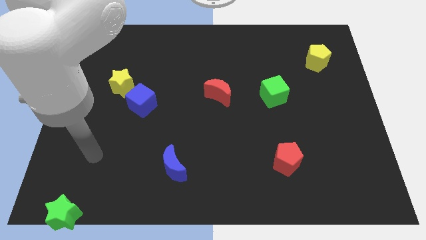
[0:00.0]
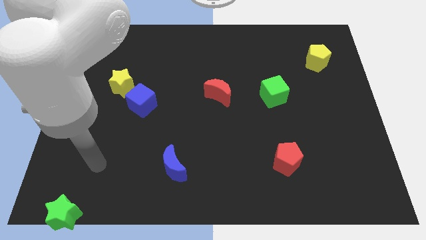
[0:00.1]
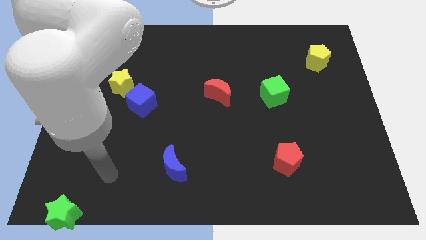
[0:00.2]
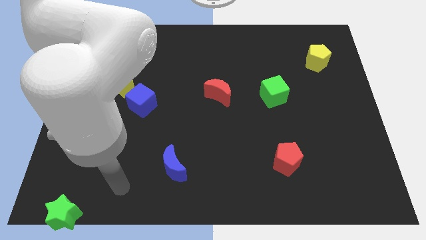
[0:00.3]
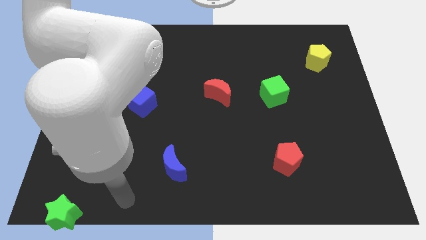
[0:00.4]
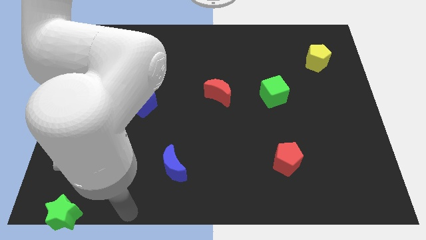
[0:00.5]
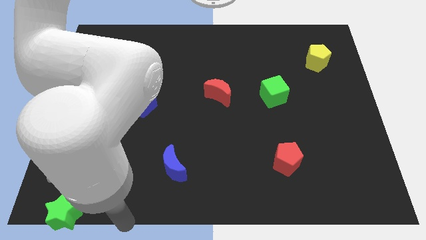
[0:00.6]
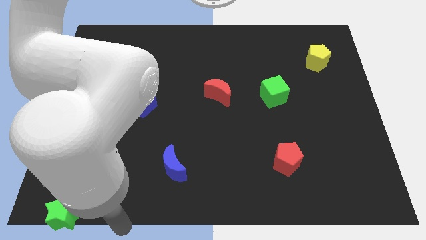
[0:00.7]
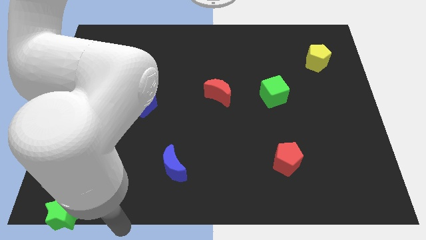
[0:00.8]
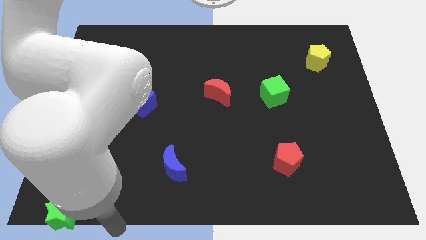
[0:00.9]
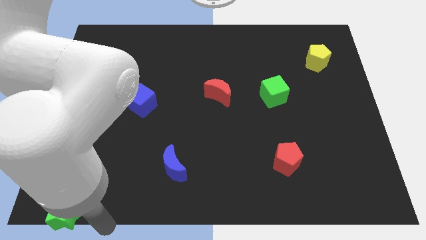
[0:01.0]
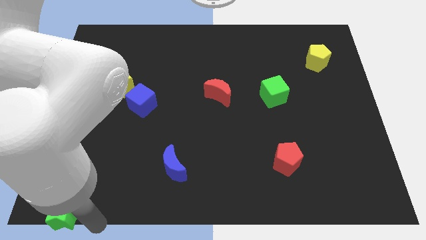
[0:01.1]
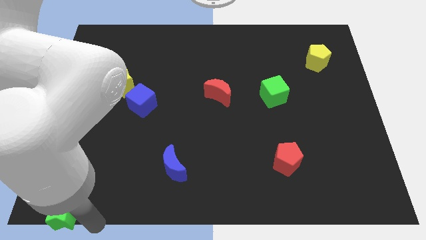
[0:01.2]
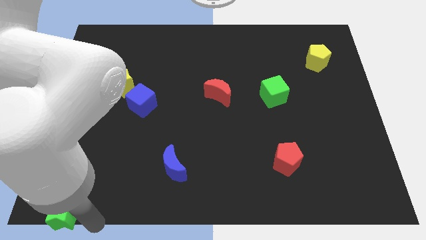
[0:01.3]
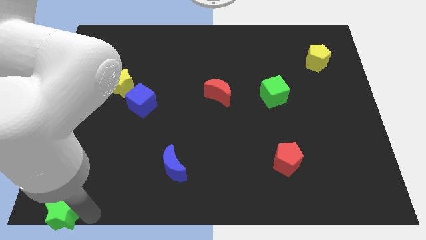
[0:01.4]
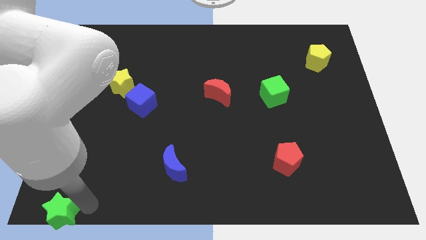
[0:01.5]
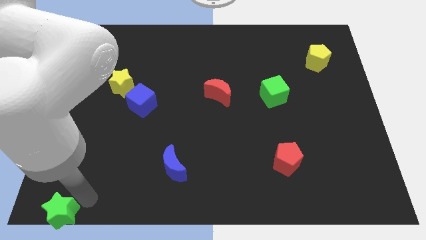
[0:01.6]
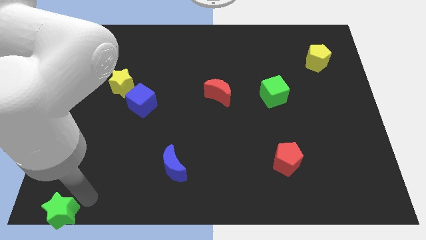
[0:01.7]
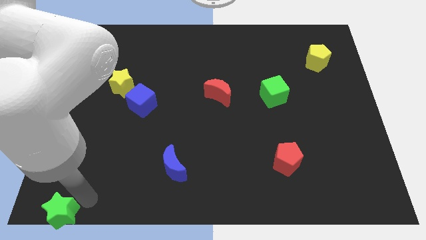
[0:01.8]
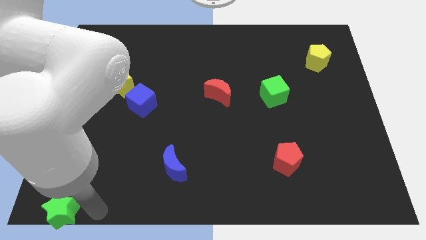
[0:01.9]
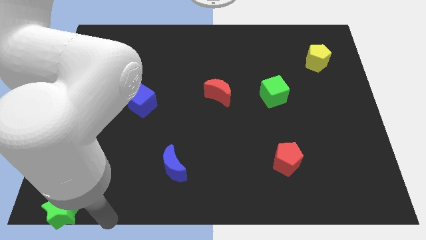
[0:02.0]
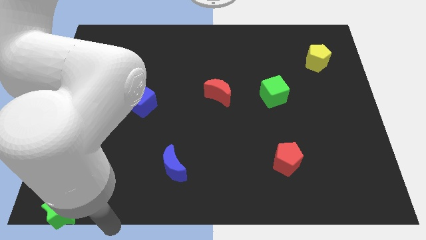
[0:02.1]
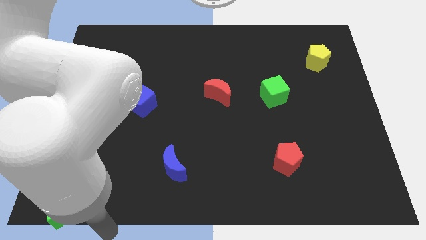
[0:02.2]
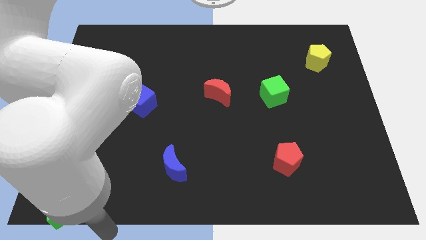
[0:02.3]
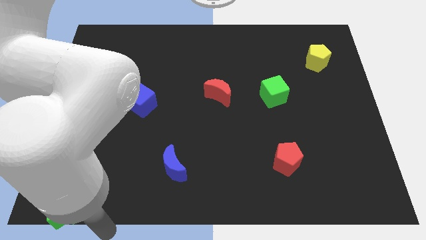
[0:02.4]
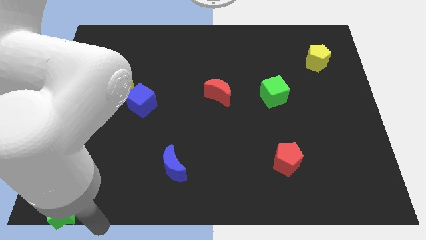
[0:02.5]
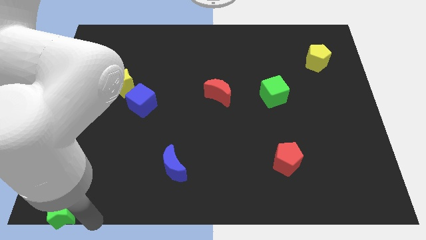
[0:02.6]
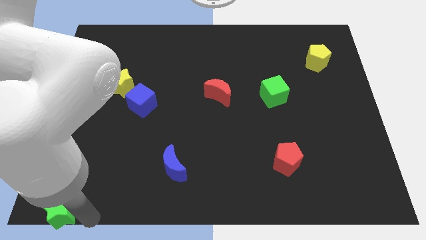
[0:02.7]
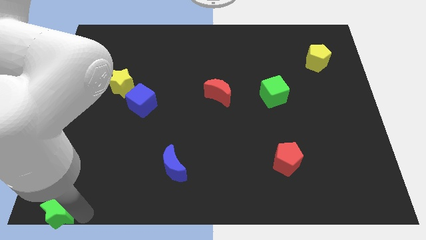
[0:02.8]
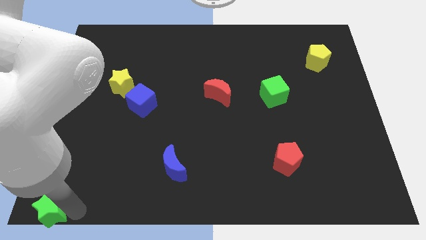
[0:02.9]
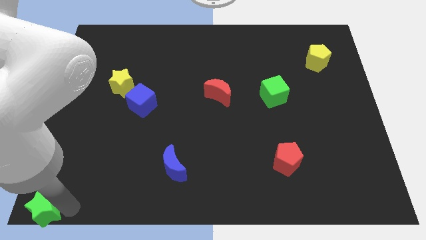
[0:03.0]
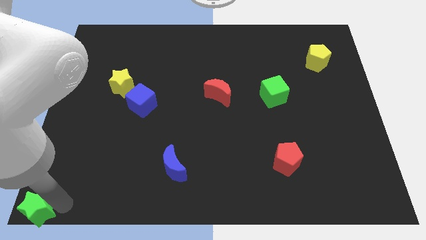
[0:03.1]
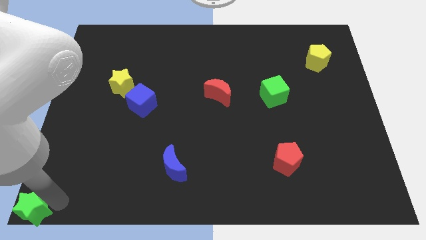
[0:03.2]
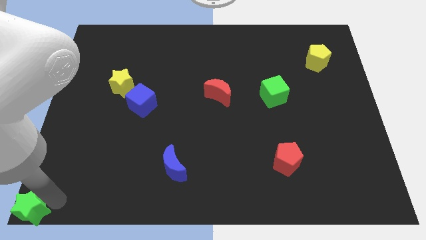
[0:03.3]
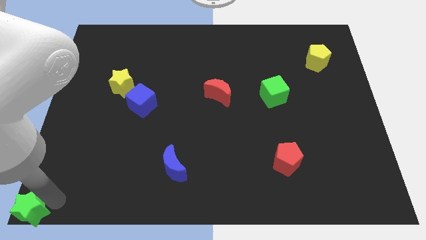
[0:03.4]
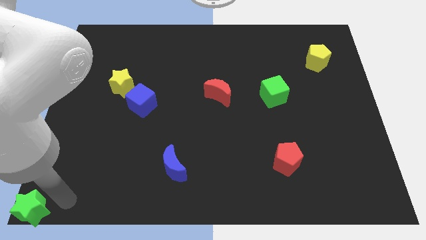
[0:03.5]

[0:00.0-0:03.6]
move the green star at the bottom left corner of the table

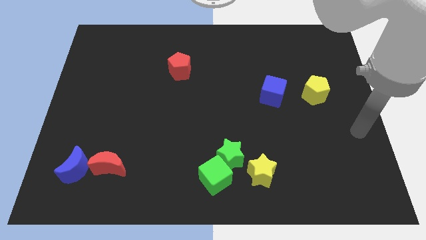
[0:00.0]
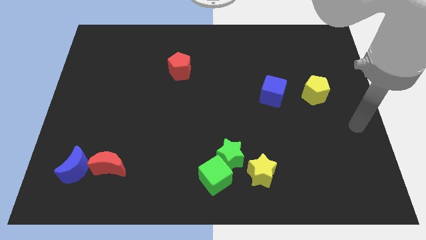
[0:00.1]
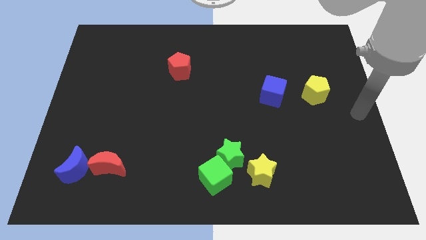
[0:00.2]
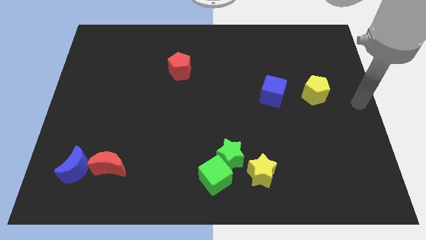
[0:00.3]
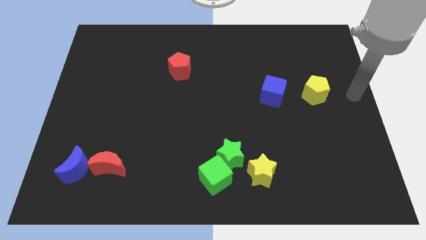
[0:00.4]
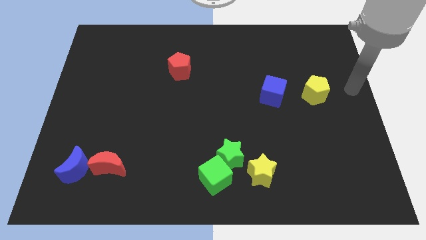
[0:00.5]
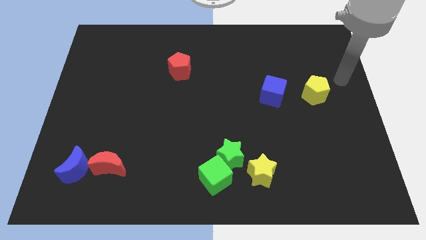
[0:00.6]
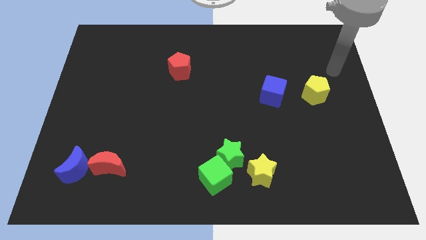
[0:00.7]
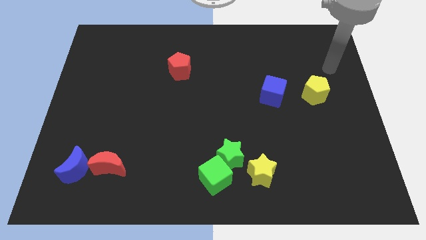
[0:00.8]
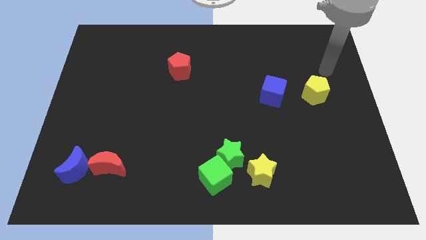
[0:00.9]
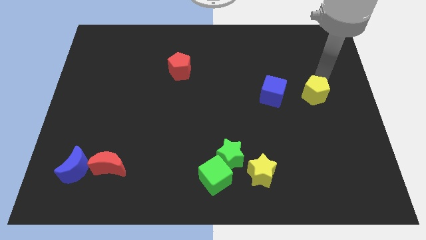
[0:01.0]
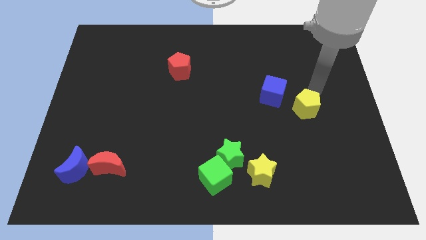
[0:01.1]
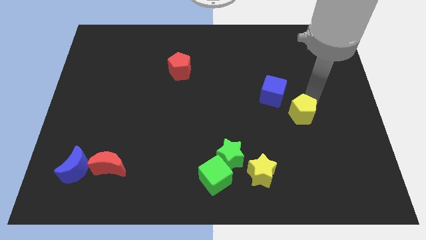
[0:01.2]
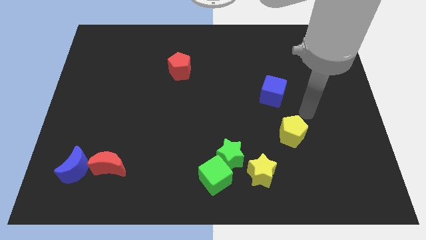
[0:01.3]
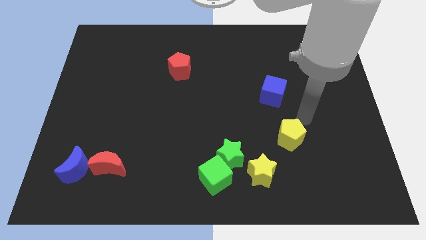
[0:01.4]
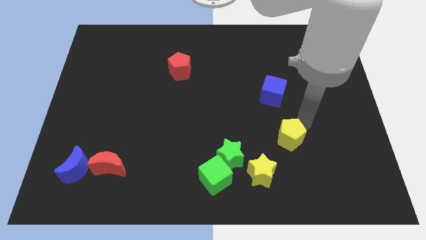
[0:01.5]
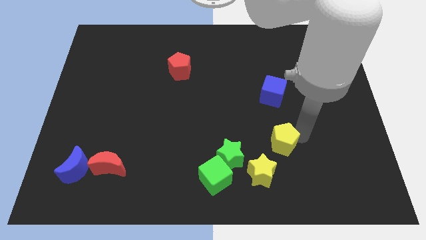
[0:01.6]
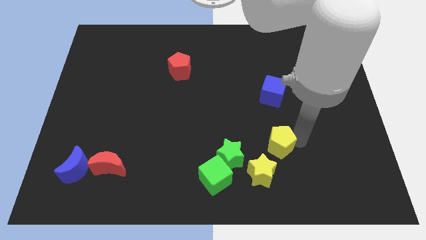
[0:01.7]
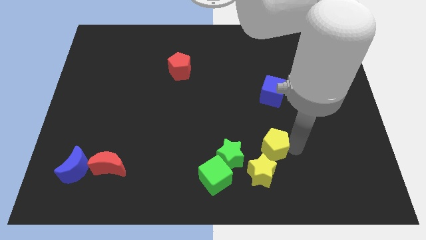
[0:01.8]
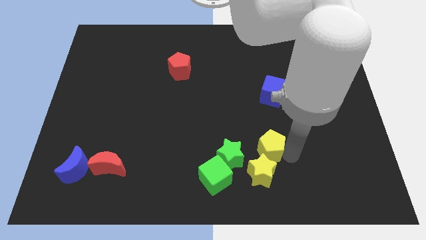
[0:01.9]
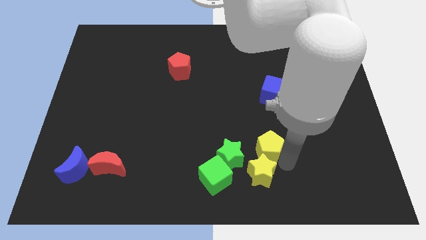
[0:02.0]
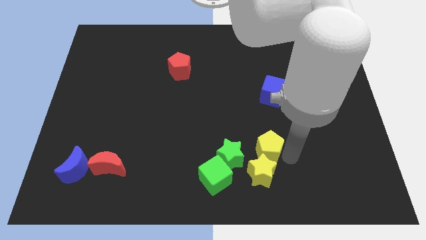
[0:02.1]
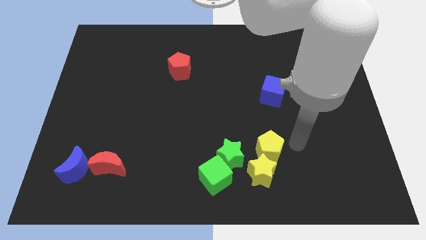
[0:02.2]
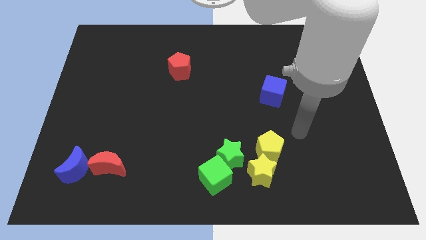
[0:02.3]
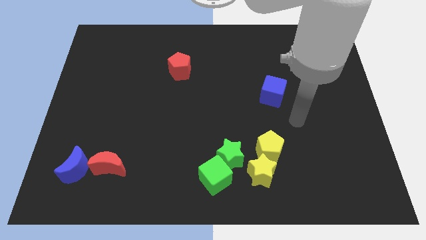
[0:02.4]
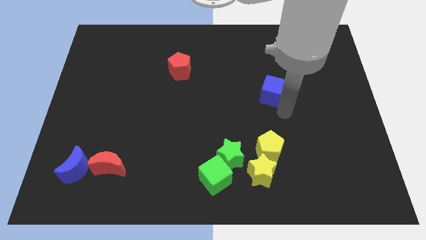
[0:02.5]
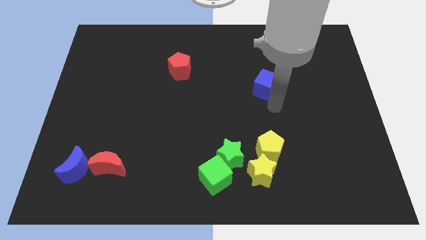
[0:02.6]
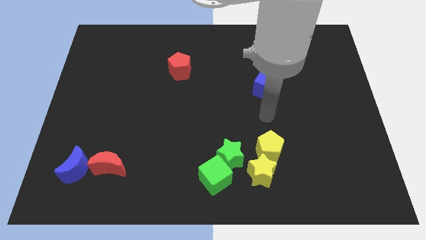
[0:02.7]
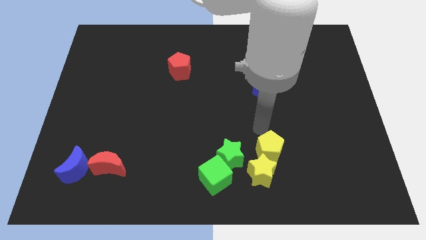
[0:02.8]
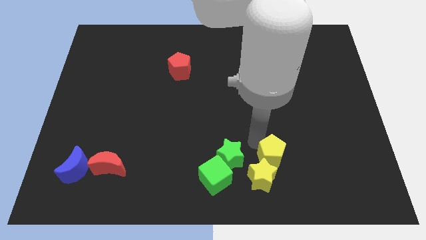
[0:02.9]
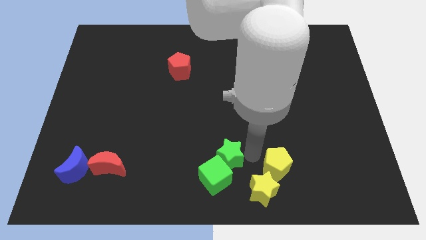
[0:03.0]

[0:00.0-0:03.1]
push the yellow pentagon towards the yellow star

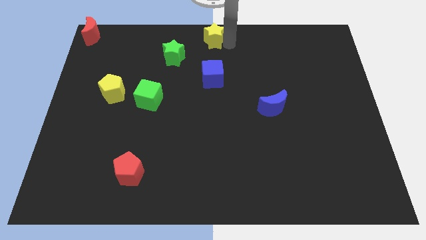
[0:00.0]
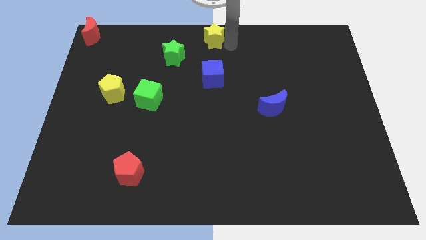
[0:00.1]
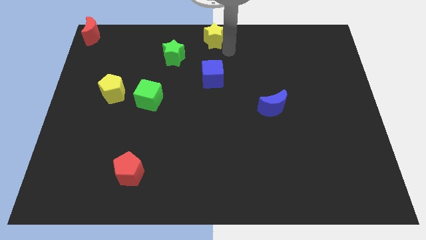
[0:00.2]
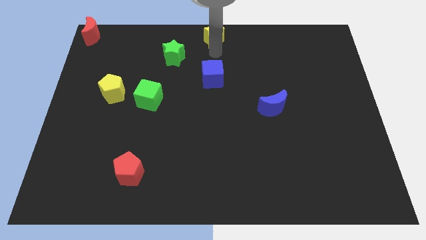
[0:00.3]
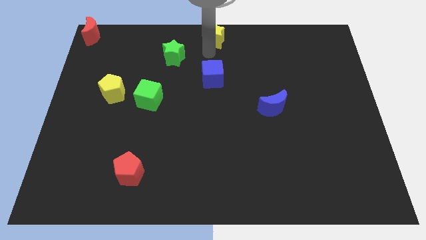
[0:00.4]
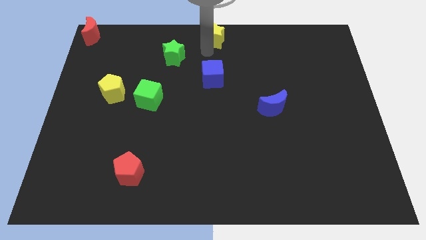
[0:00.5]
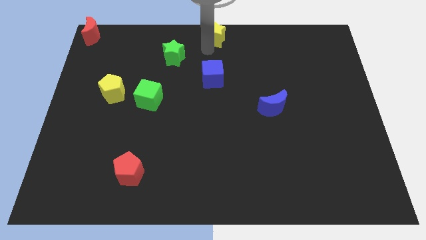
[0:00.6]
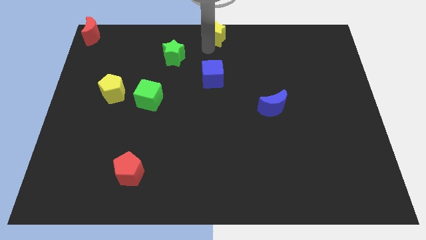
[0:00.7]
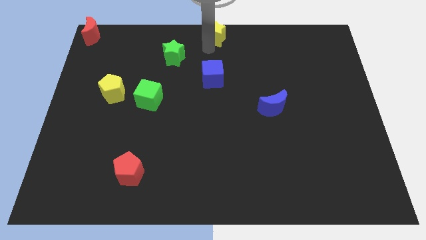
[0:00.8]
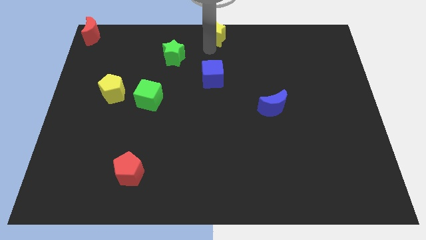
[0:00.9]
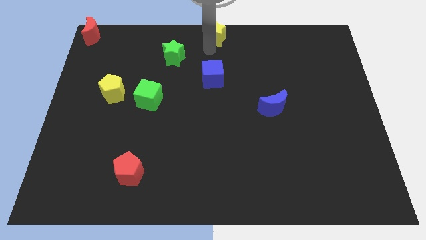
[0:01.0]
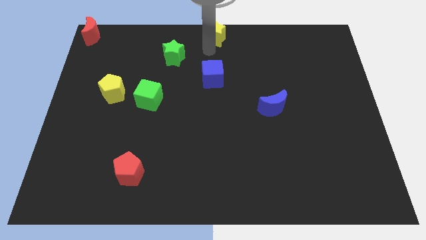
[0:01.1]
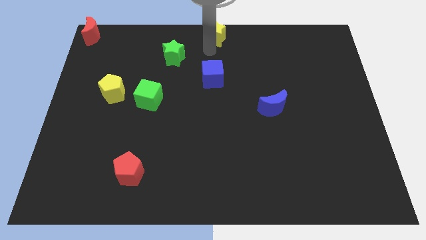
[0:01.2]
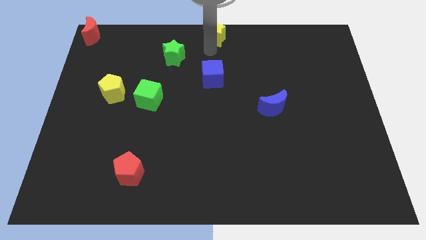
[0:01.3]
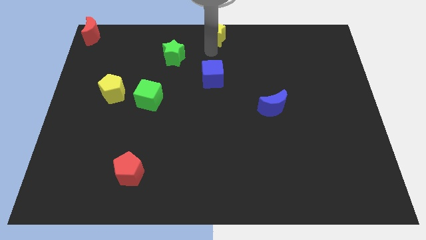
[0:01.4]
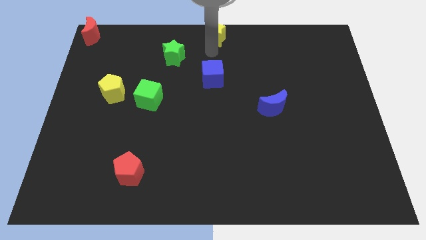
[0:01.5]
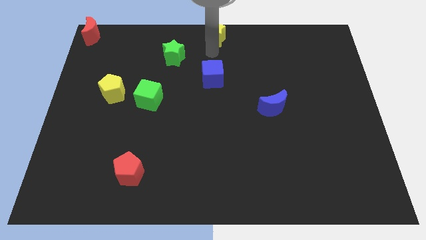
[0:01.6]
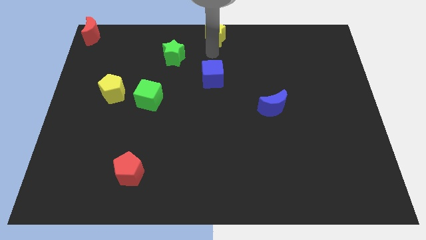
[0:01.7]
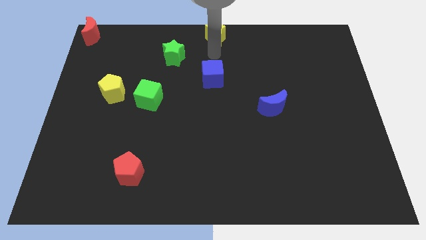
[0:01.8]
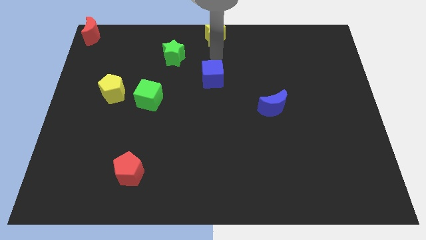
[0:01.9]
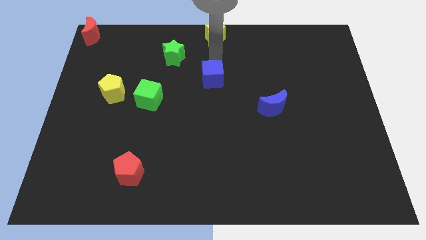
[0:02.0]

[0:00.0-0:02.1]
push the yellow star to the top

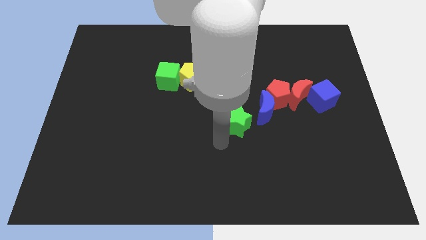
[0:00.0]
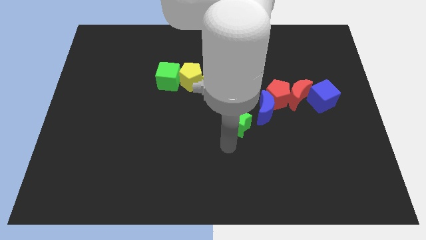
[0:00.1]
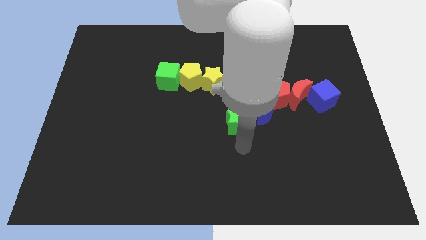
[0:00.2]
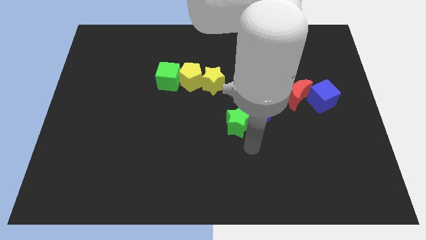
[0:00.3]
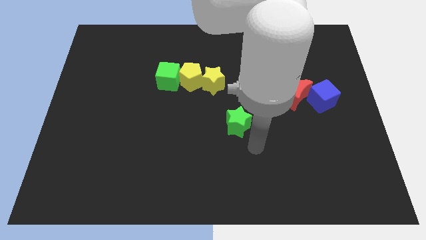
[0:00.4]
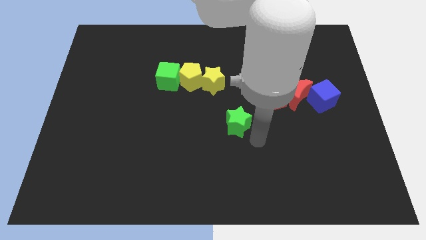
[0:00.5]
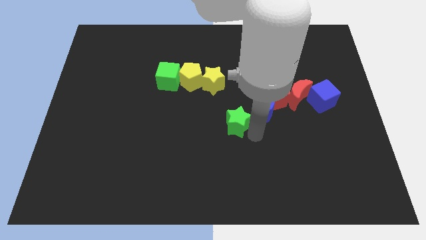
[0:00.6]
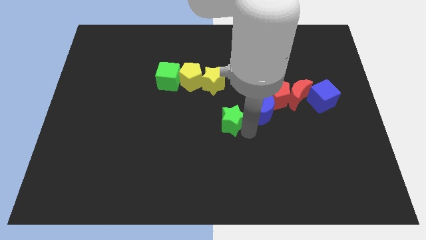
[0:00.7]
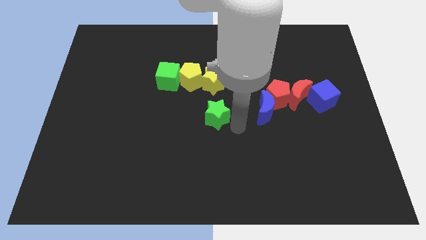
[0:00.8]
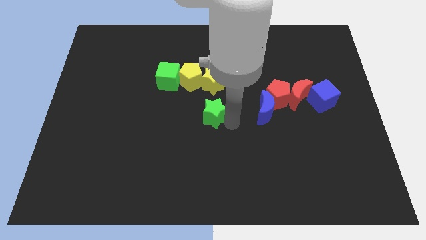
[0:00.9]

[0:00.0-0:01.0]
put the green star below the yellow star
